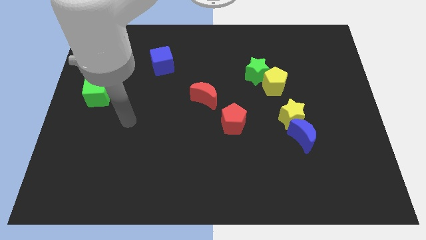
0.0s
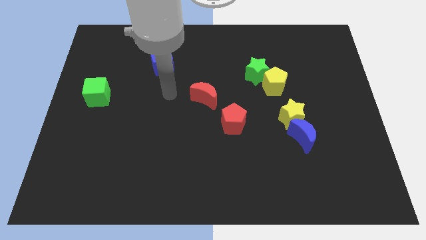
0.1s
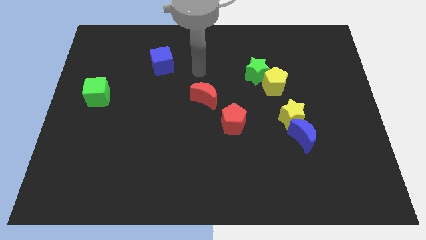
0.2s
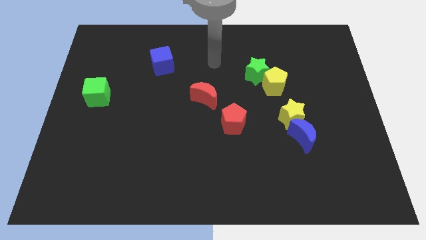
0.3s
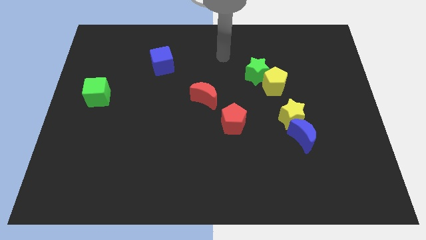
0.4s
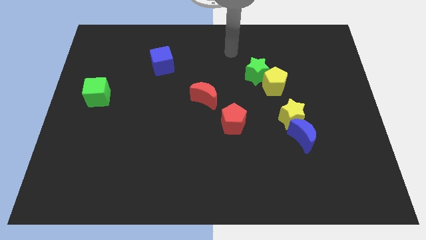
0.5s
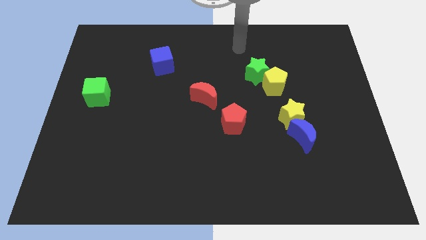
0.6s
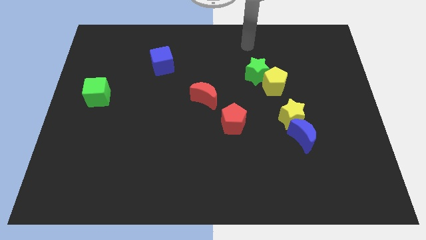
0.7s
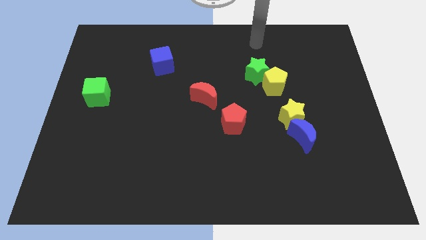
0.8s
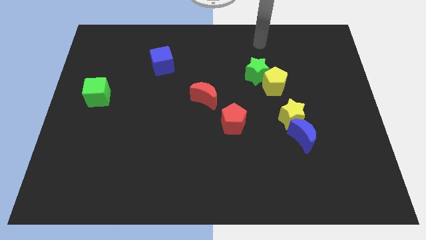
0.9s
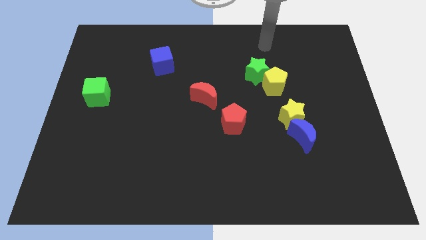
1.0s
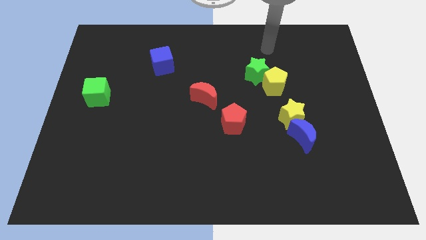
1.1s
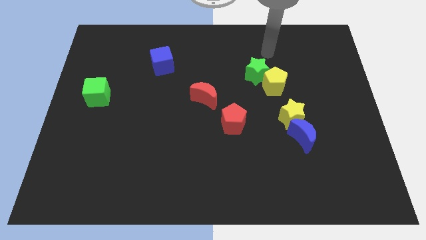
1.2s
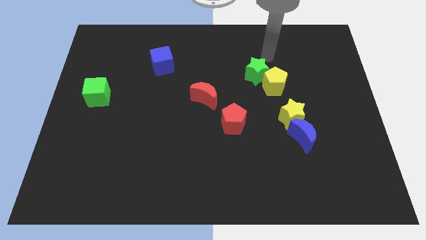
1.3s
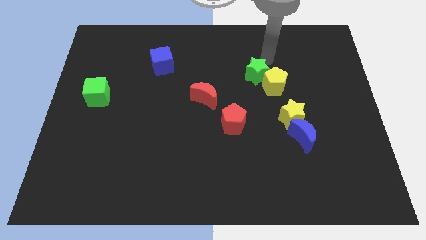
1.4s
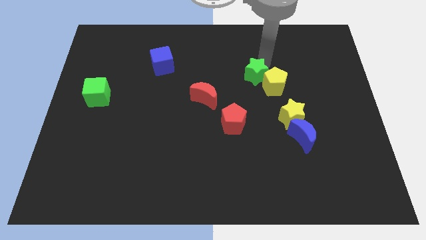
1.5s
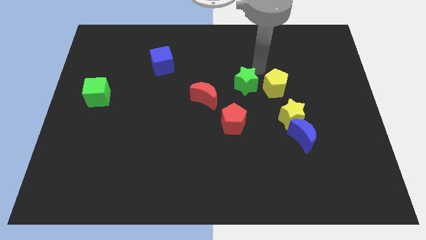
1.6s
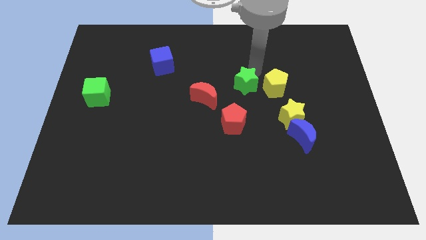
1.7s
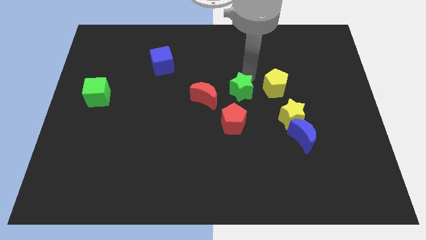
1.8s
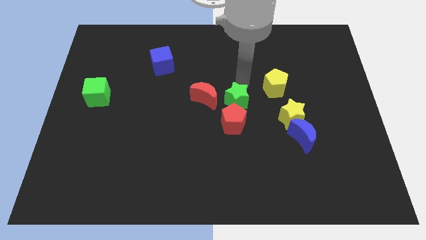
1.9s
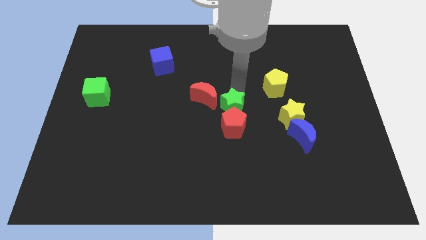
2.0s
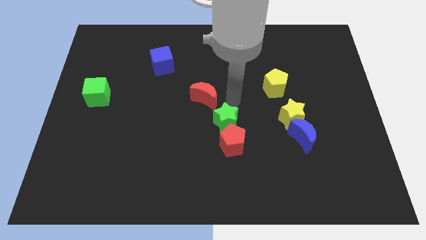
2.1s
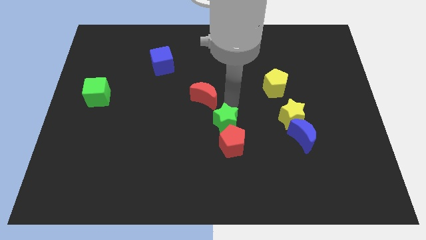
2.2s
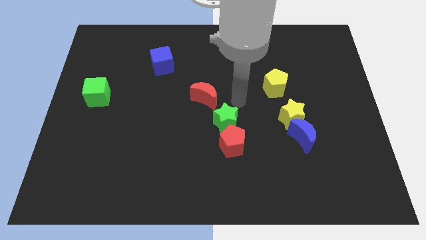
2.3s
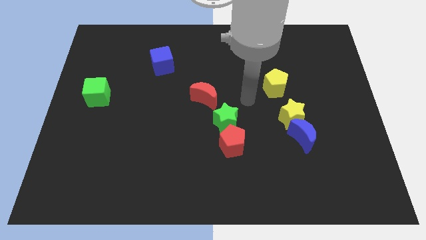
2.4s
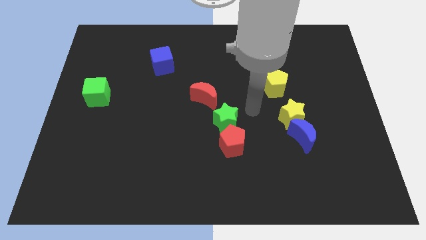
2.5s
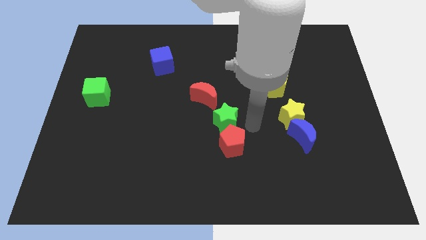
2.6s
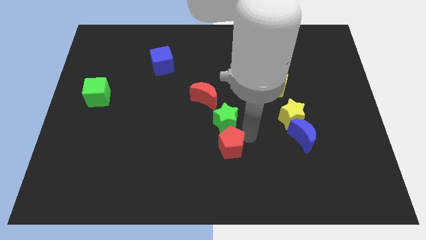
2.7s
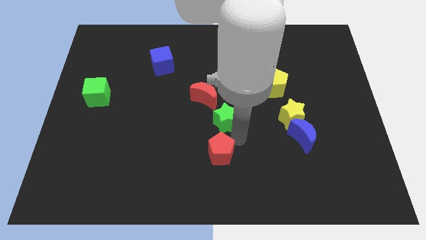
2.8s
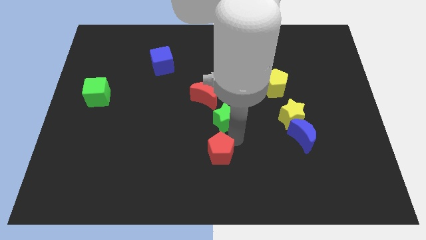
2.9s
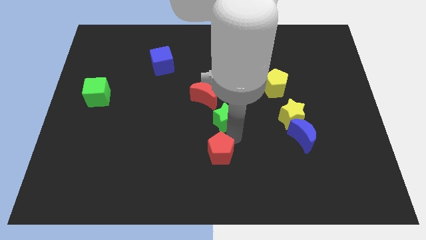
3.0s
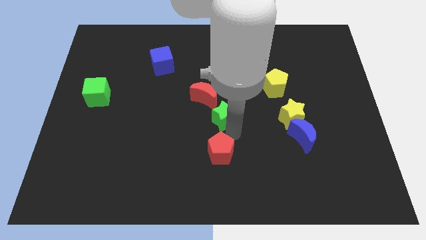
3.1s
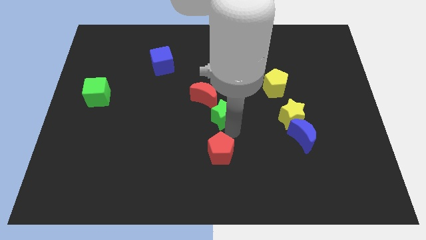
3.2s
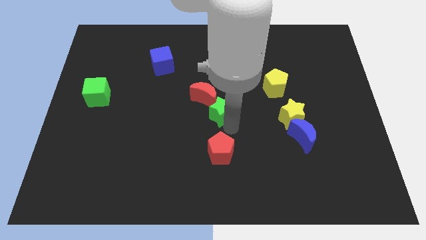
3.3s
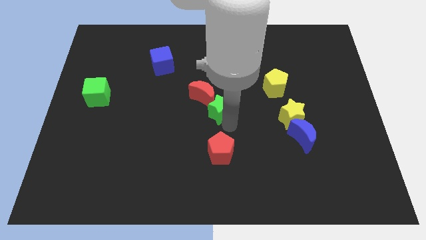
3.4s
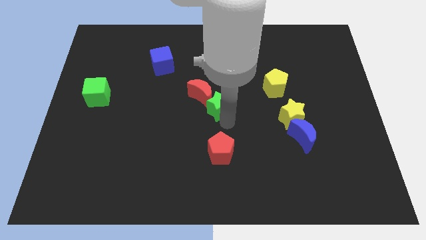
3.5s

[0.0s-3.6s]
slide the green star towards the red moon

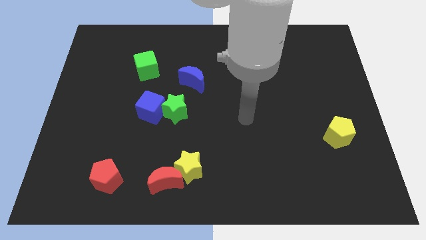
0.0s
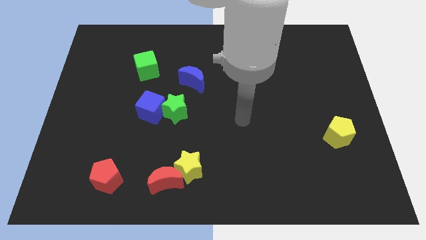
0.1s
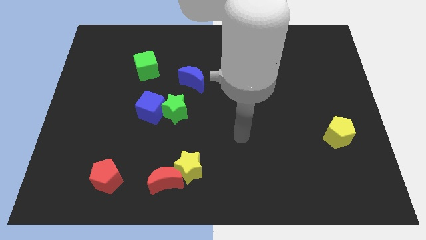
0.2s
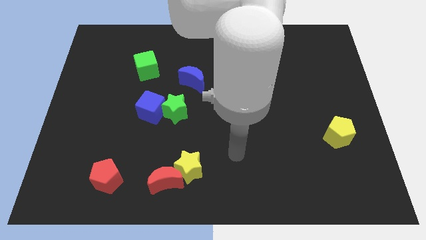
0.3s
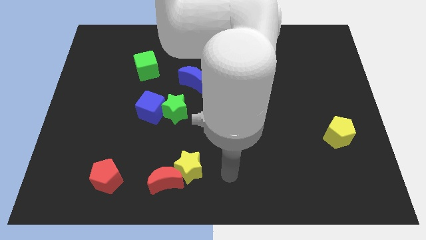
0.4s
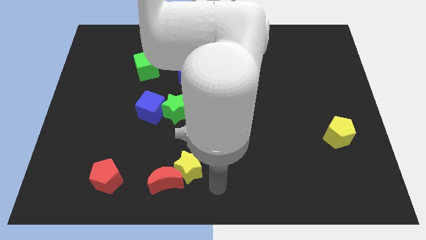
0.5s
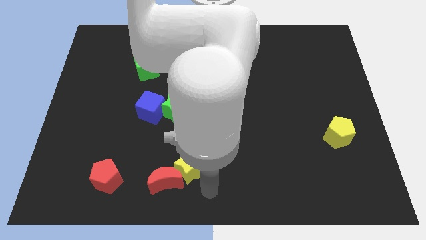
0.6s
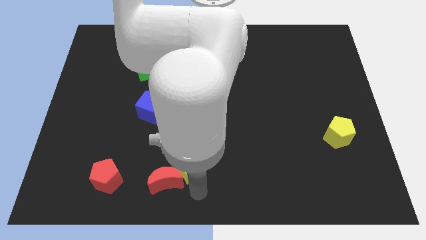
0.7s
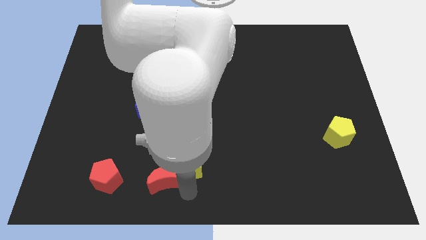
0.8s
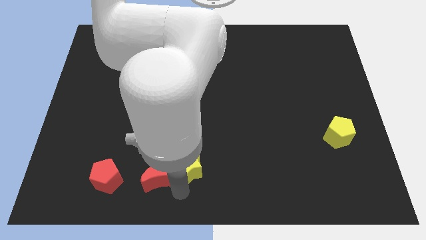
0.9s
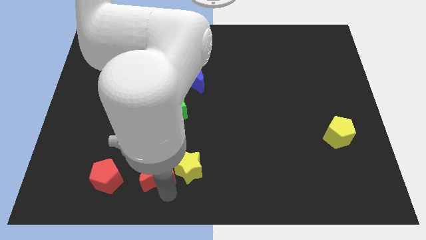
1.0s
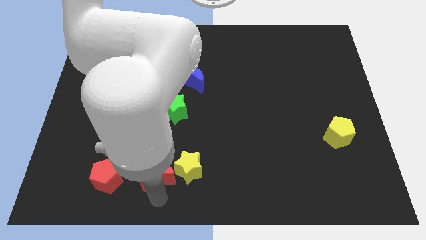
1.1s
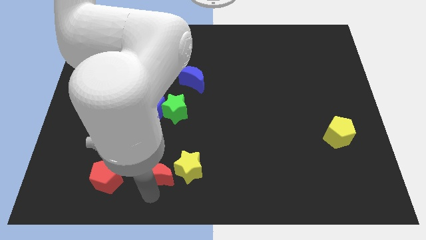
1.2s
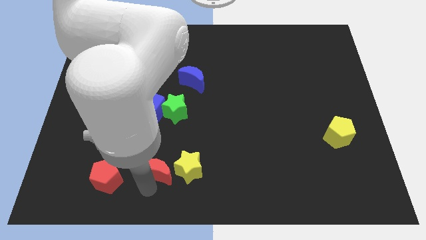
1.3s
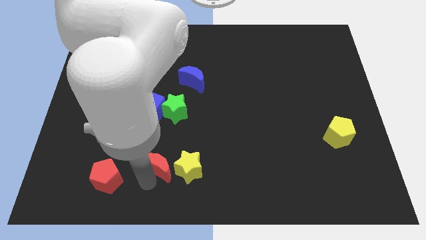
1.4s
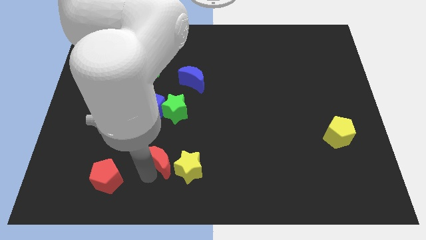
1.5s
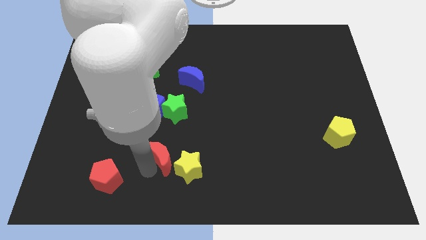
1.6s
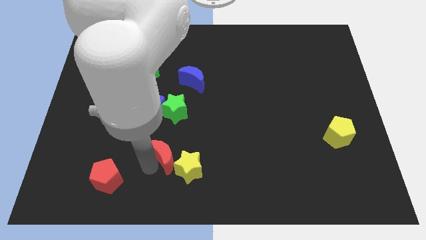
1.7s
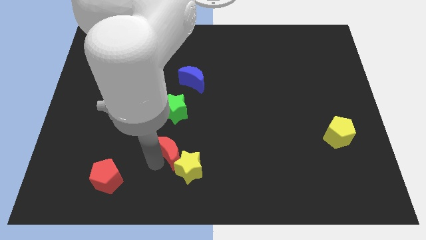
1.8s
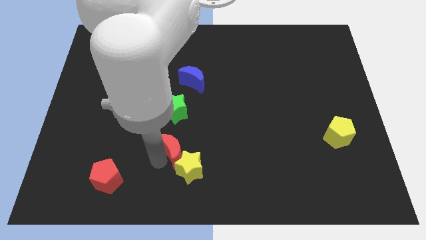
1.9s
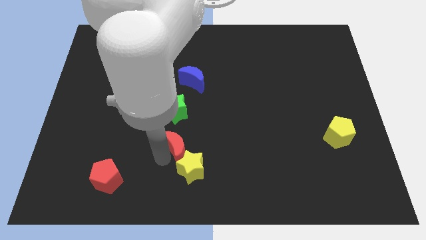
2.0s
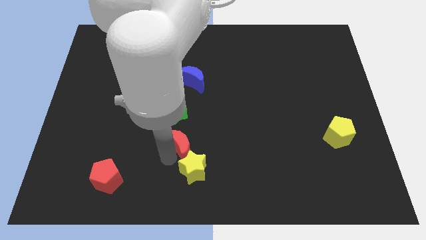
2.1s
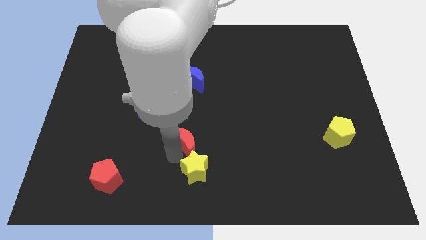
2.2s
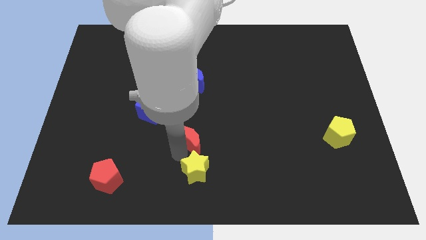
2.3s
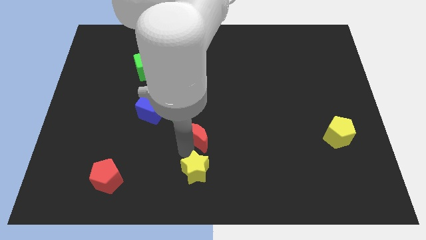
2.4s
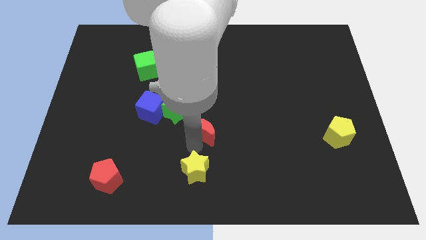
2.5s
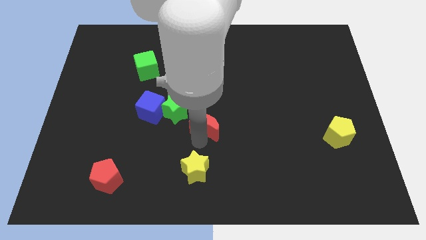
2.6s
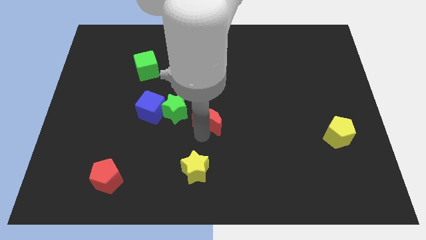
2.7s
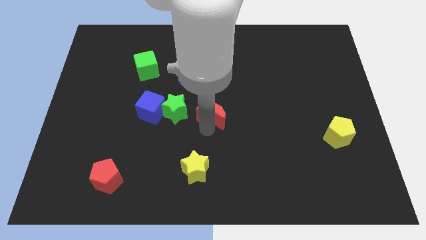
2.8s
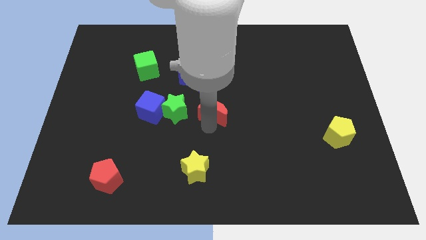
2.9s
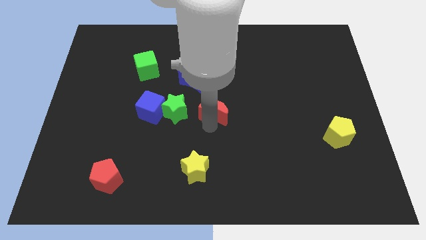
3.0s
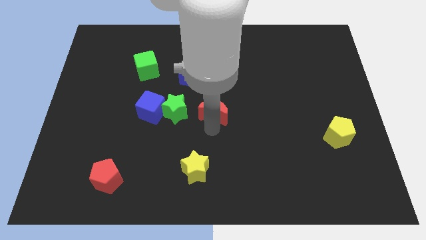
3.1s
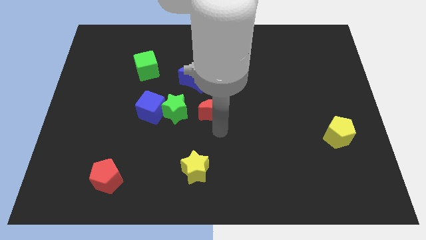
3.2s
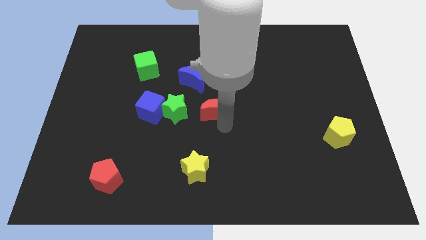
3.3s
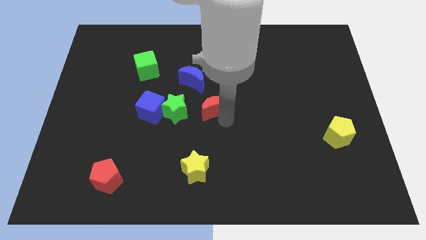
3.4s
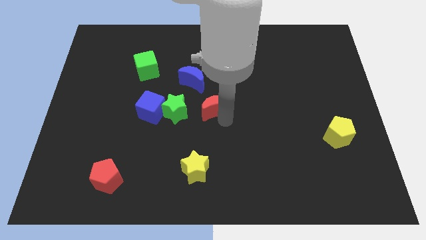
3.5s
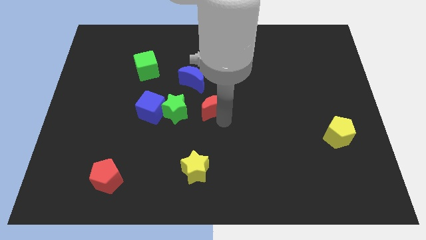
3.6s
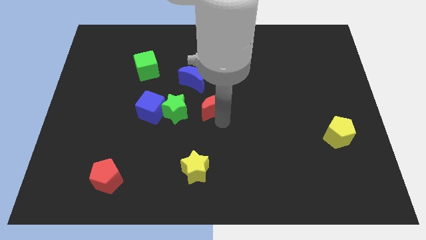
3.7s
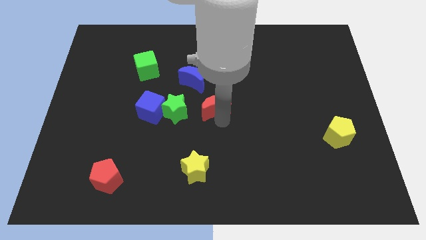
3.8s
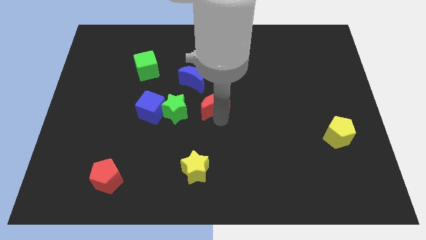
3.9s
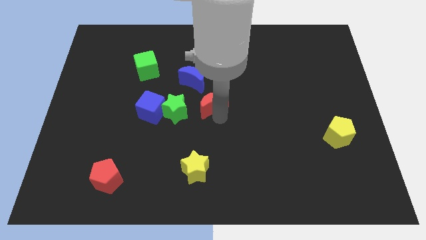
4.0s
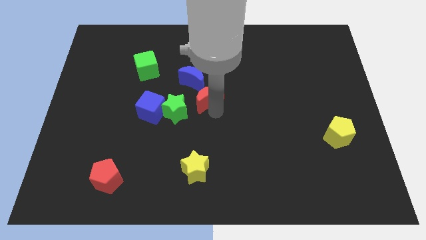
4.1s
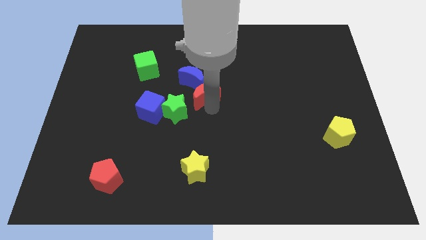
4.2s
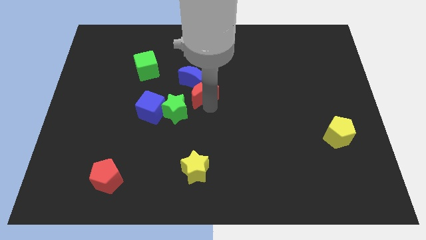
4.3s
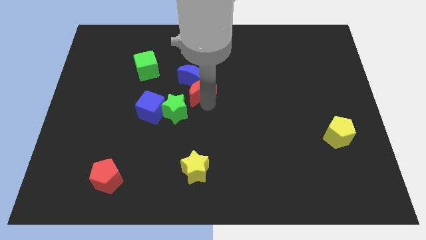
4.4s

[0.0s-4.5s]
slide the red moon next to the blue moon

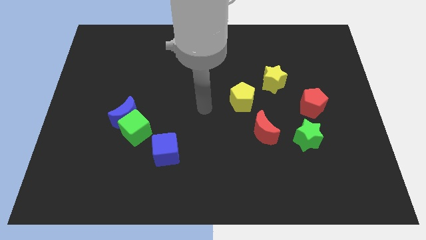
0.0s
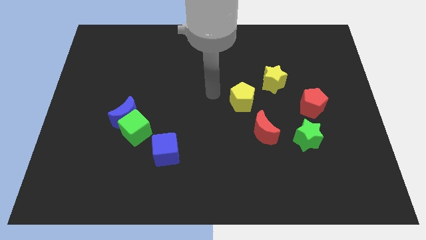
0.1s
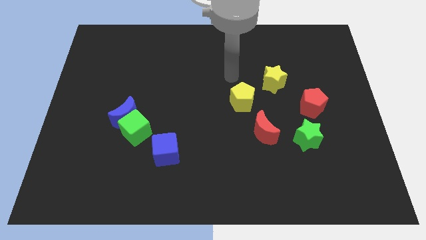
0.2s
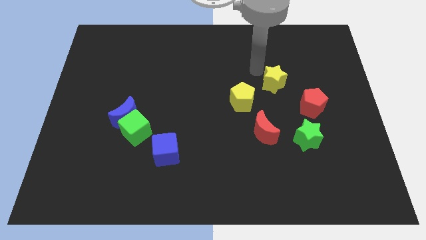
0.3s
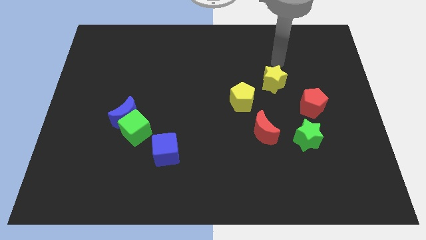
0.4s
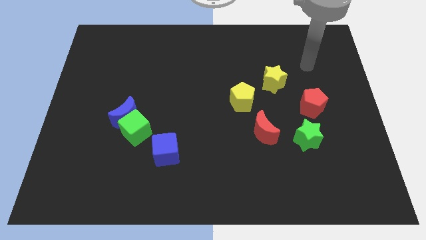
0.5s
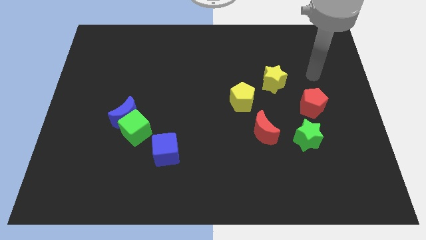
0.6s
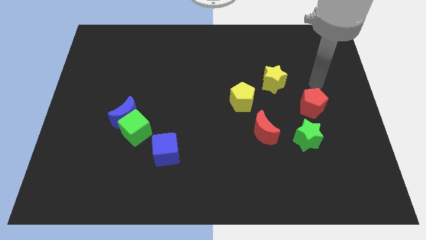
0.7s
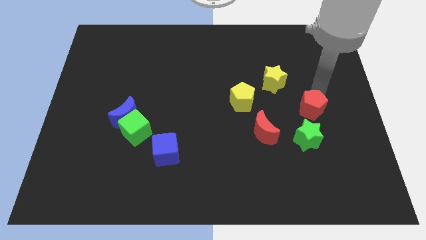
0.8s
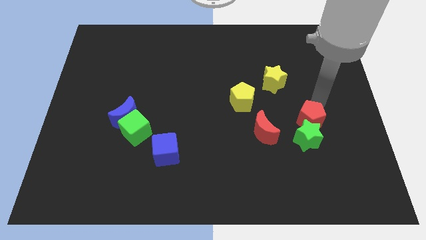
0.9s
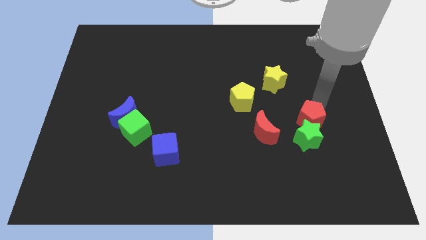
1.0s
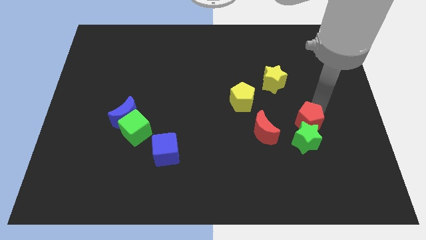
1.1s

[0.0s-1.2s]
move the red pentagon towards the green star
